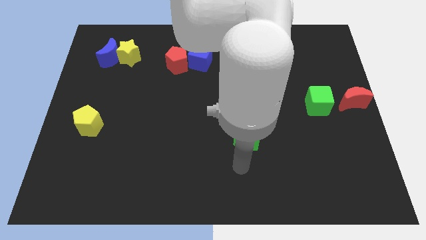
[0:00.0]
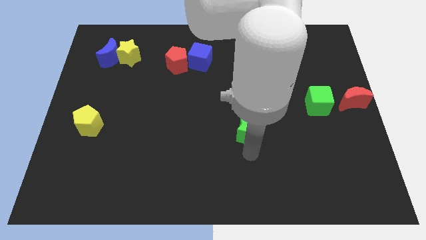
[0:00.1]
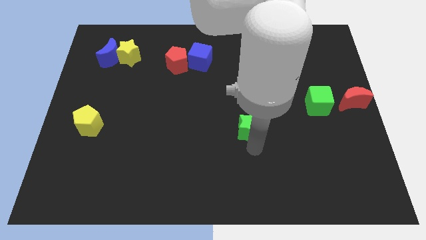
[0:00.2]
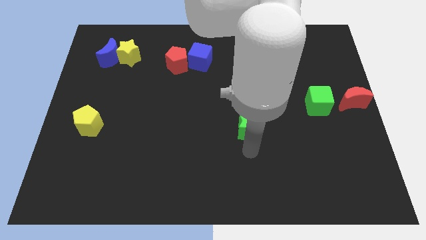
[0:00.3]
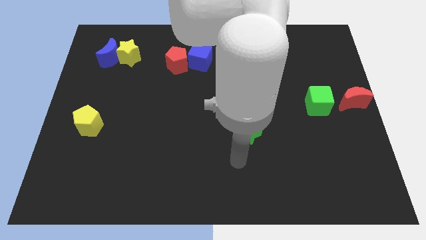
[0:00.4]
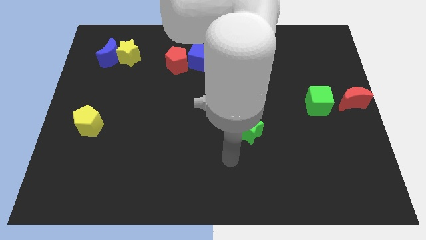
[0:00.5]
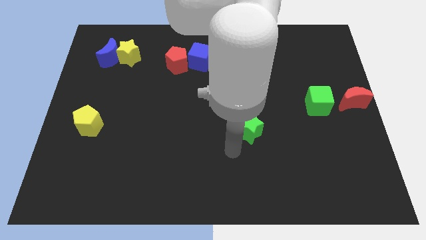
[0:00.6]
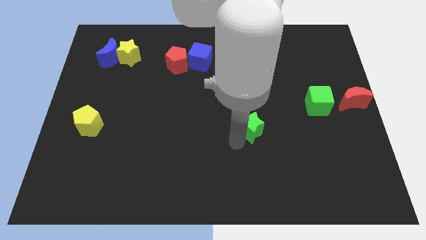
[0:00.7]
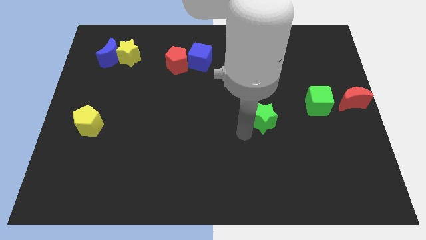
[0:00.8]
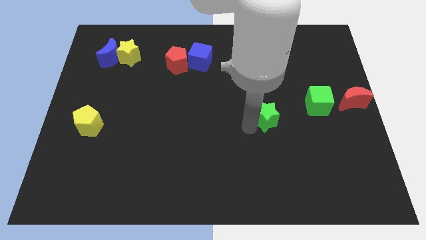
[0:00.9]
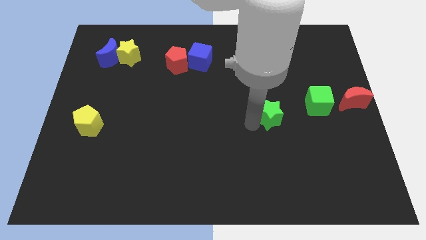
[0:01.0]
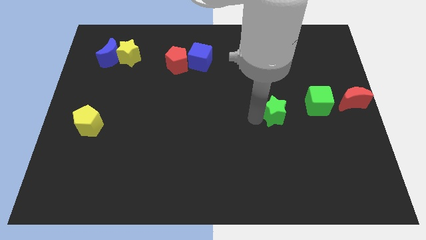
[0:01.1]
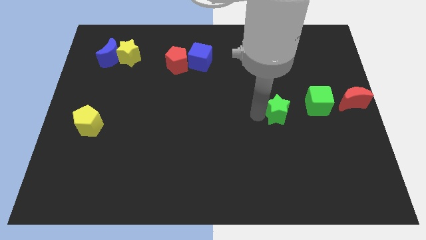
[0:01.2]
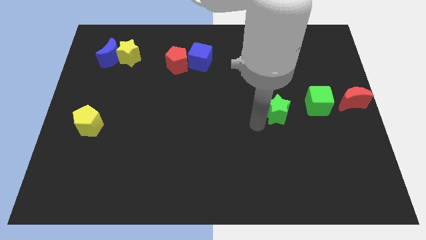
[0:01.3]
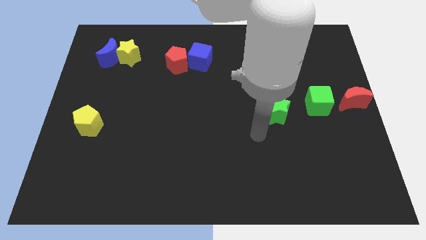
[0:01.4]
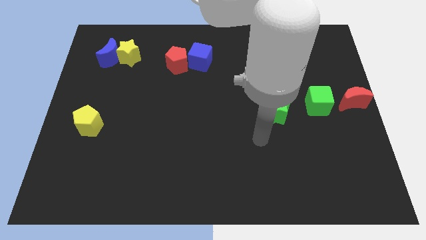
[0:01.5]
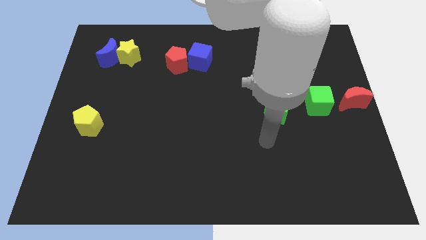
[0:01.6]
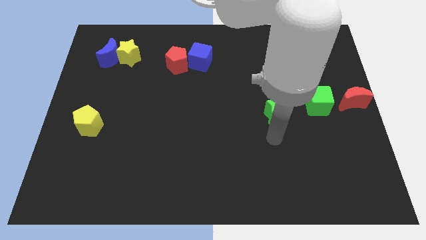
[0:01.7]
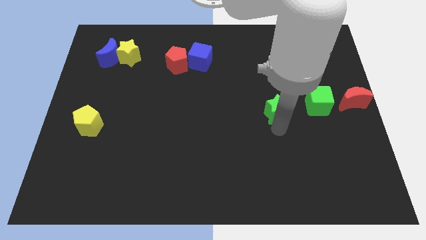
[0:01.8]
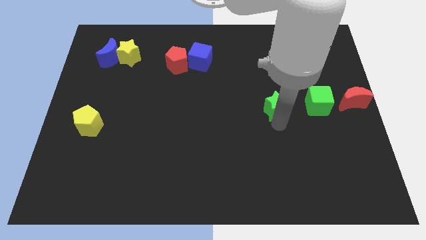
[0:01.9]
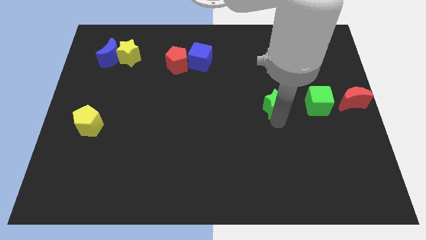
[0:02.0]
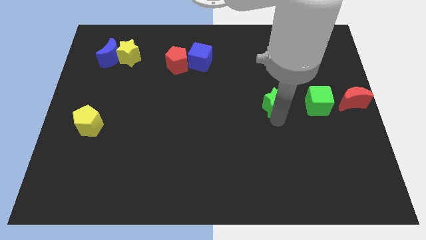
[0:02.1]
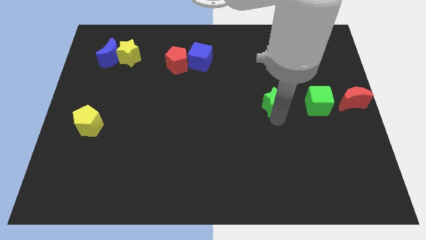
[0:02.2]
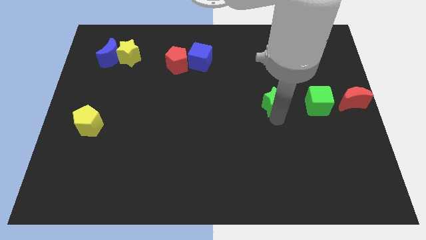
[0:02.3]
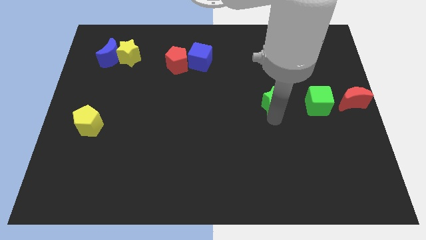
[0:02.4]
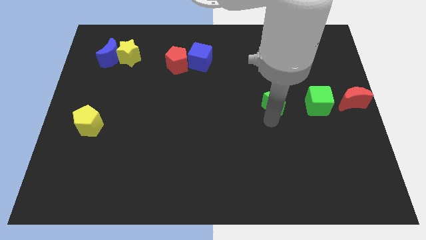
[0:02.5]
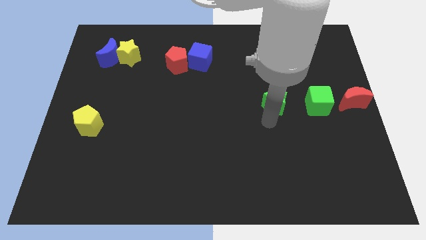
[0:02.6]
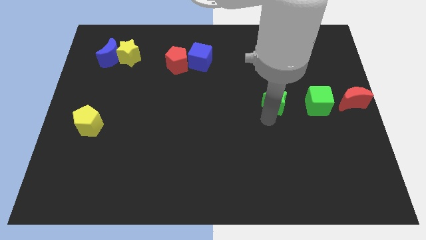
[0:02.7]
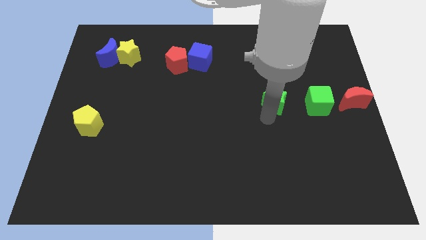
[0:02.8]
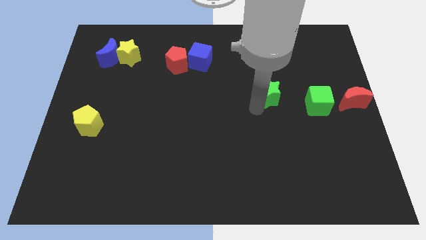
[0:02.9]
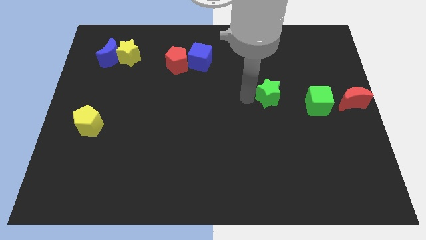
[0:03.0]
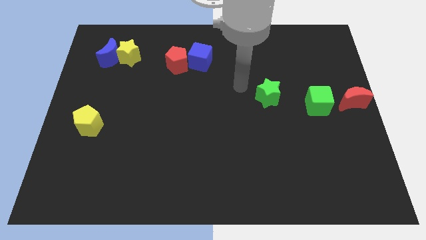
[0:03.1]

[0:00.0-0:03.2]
place the green stat to the left of the green cube

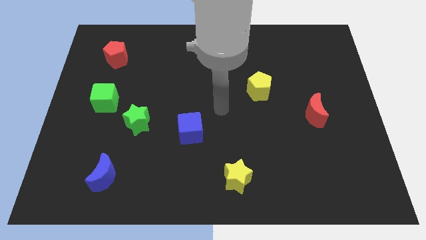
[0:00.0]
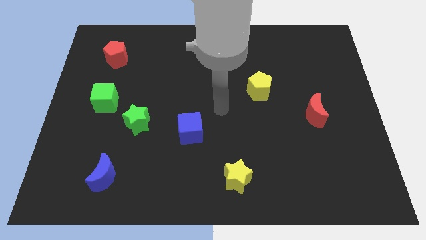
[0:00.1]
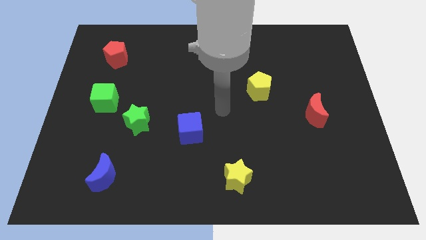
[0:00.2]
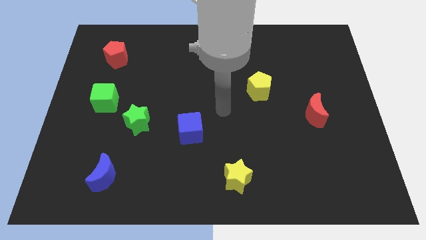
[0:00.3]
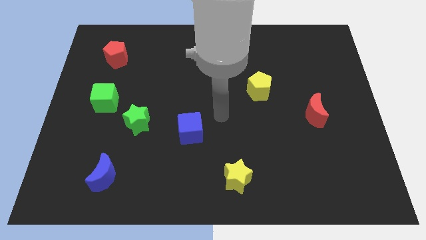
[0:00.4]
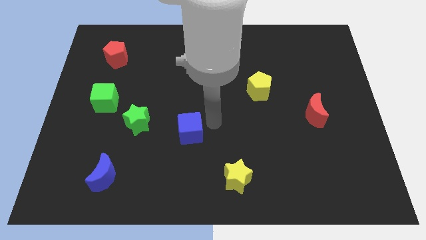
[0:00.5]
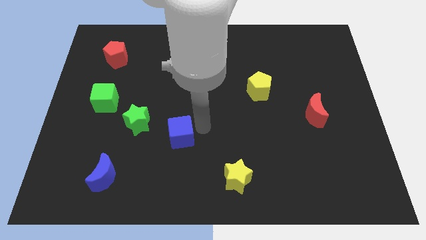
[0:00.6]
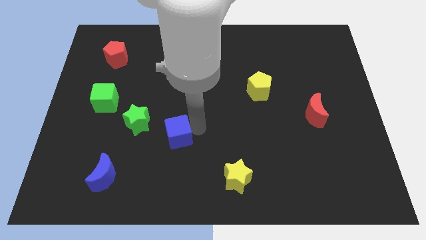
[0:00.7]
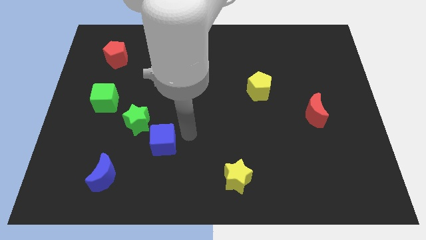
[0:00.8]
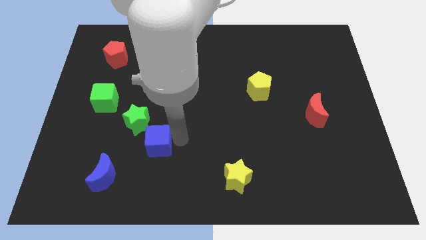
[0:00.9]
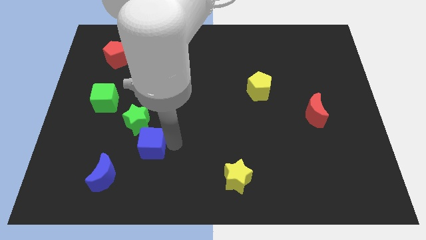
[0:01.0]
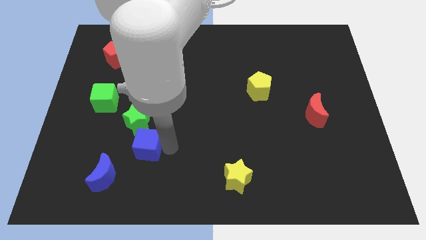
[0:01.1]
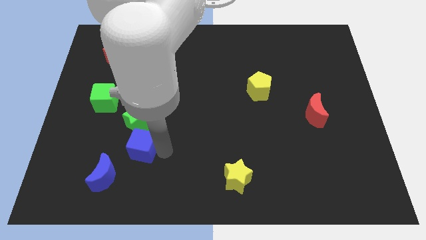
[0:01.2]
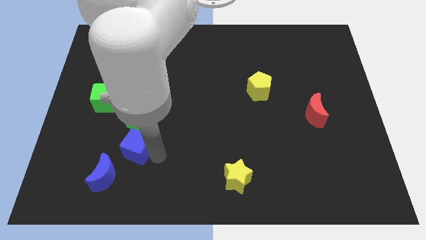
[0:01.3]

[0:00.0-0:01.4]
move the blue cube below green star

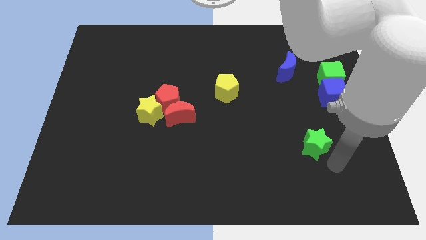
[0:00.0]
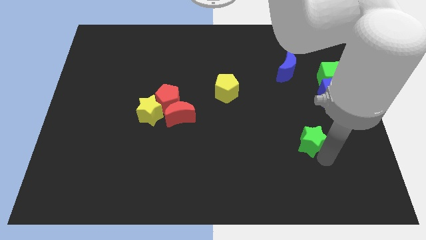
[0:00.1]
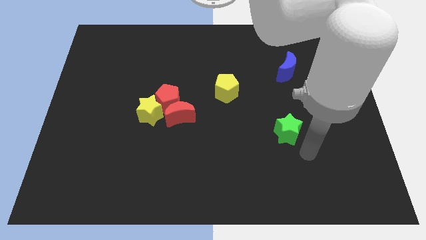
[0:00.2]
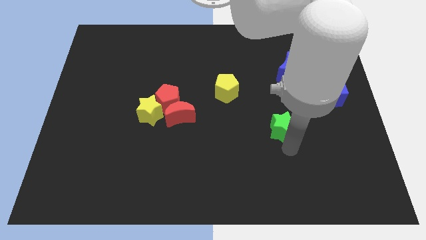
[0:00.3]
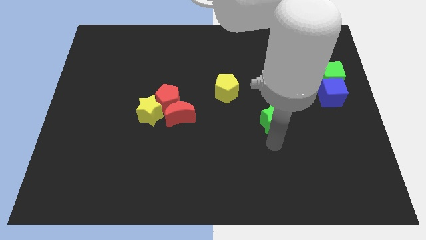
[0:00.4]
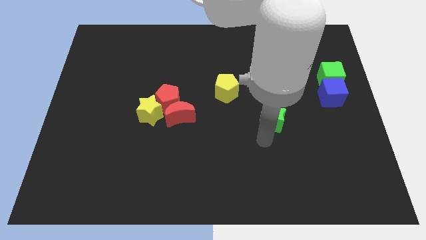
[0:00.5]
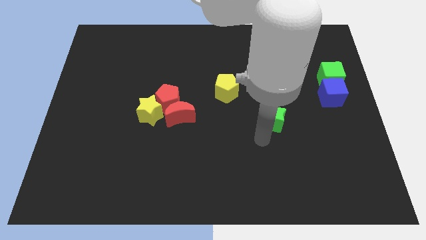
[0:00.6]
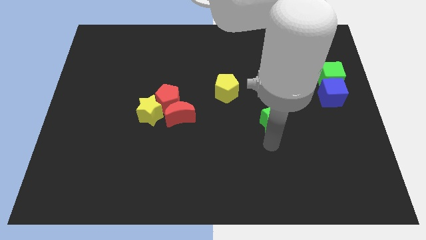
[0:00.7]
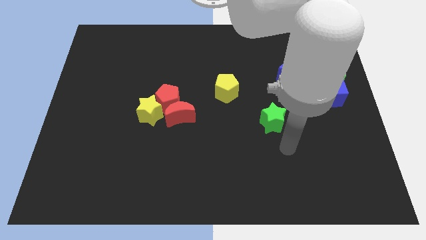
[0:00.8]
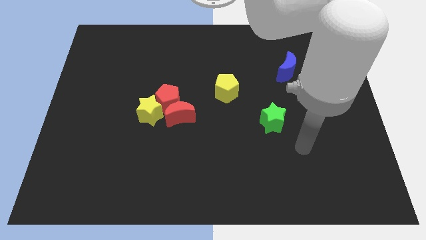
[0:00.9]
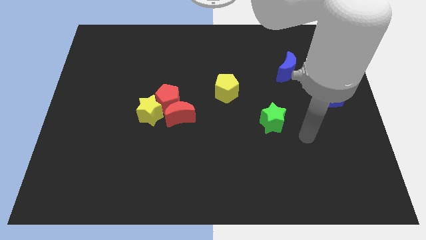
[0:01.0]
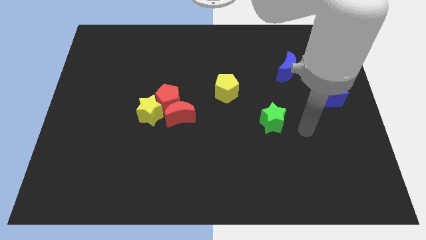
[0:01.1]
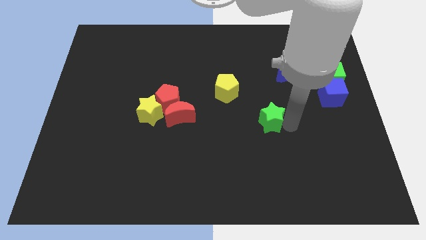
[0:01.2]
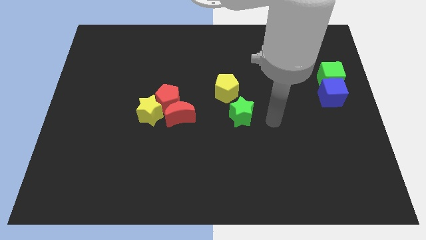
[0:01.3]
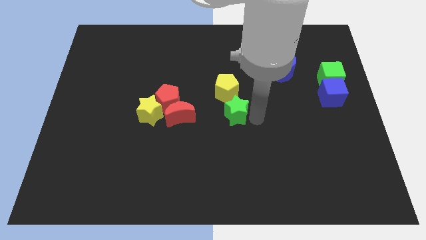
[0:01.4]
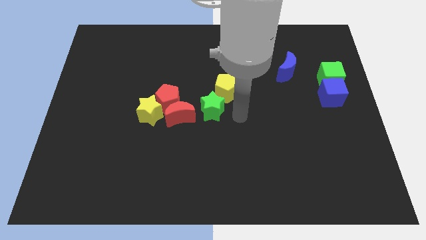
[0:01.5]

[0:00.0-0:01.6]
place the green star right to the red moon

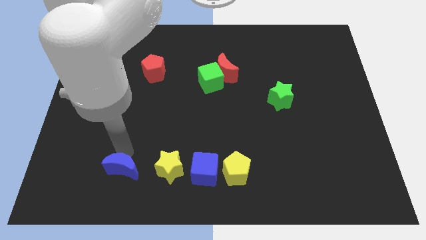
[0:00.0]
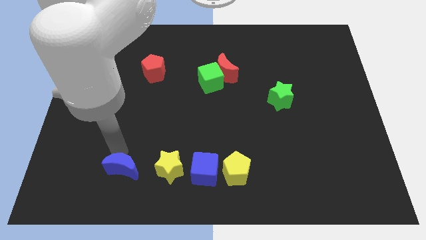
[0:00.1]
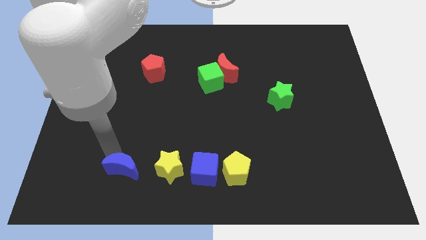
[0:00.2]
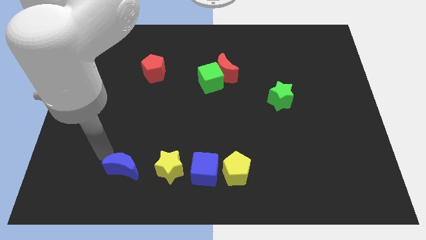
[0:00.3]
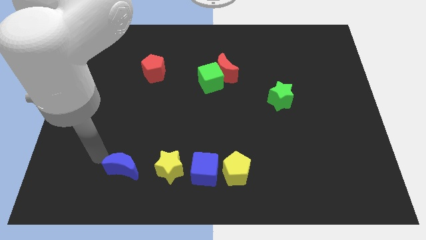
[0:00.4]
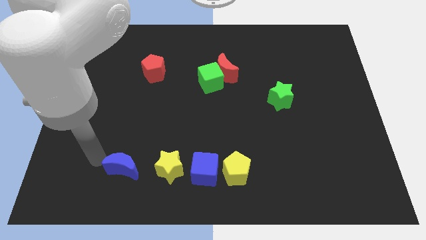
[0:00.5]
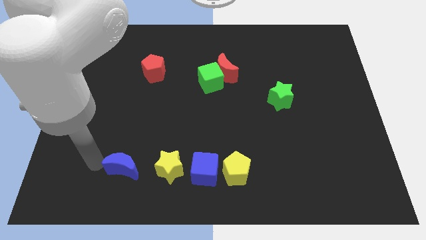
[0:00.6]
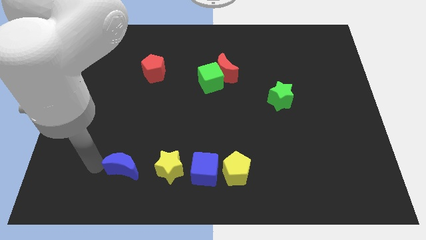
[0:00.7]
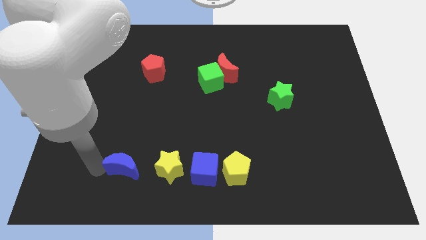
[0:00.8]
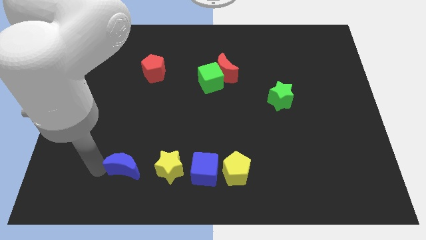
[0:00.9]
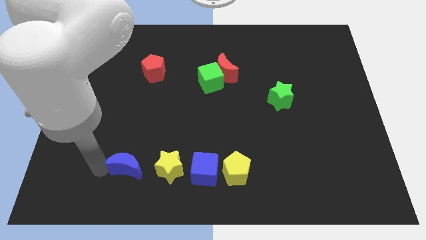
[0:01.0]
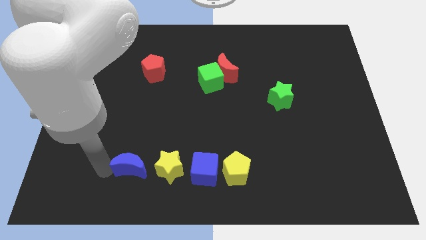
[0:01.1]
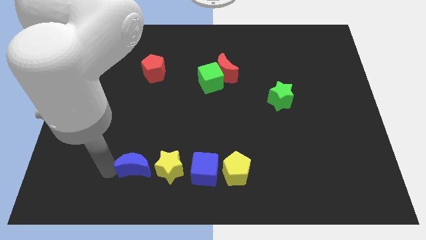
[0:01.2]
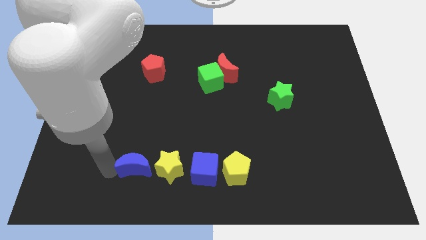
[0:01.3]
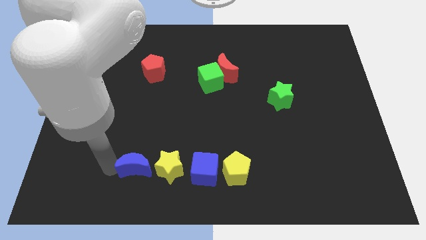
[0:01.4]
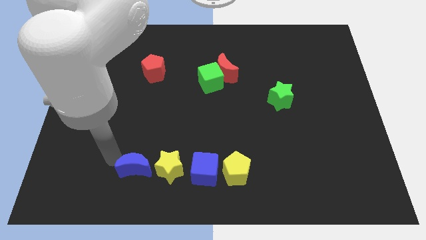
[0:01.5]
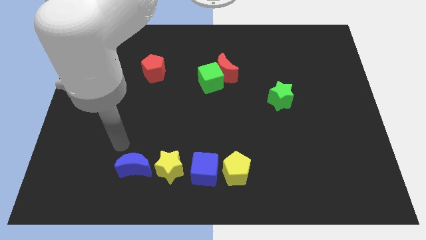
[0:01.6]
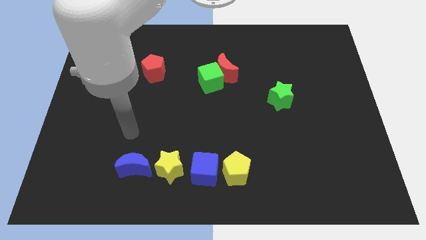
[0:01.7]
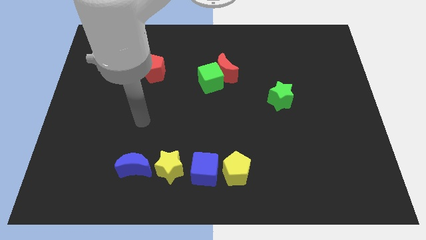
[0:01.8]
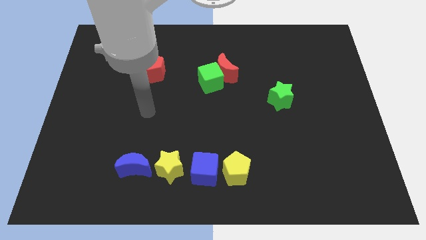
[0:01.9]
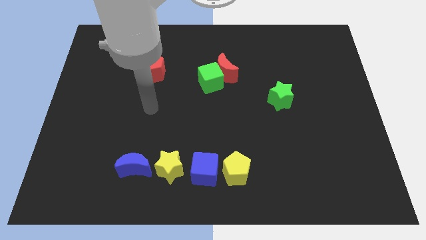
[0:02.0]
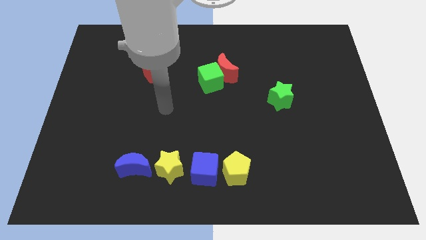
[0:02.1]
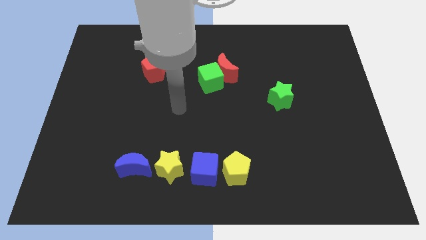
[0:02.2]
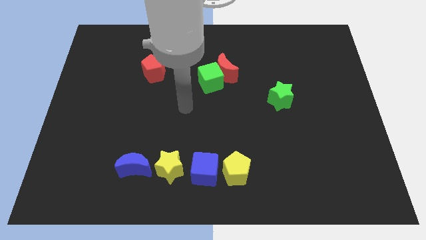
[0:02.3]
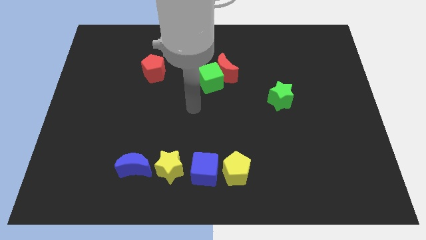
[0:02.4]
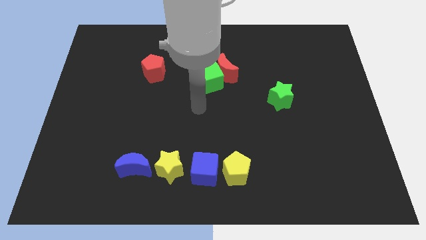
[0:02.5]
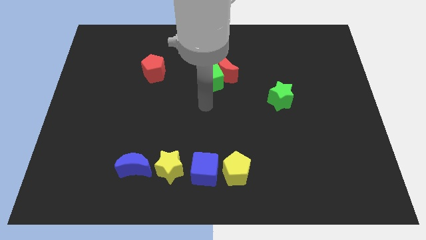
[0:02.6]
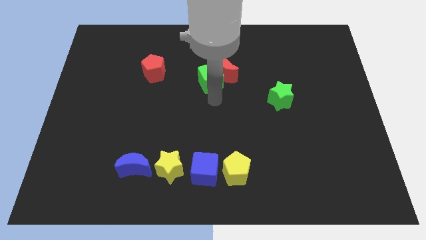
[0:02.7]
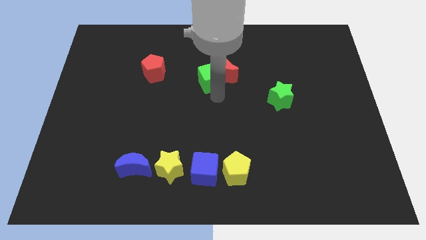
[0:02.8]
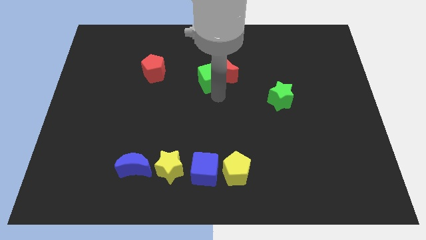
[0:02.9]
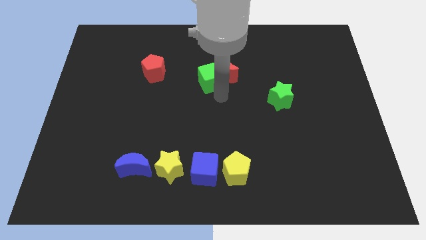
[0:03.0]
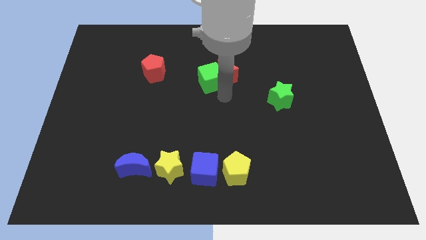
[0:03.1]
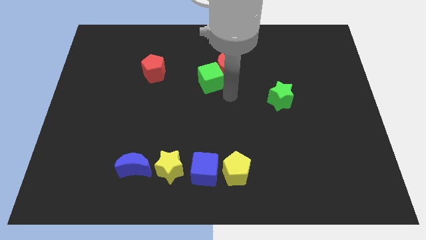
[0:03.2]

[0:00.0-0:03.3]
move the blue crescent to the left side of the yellow star
